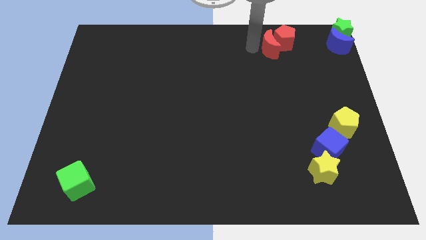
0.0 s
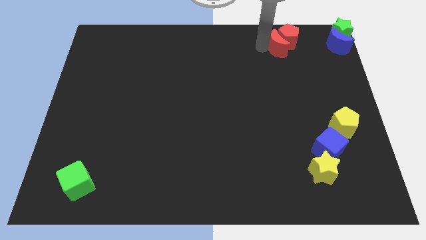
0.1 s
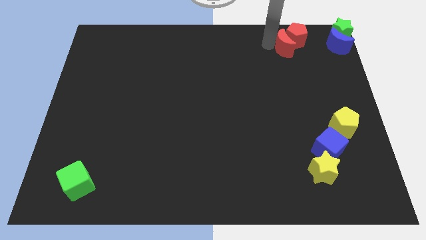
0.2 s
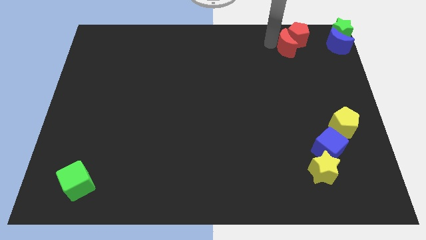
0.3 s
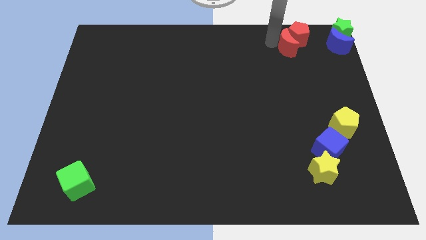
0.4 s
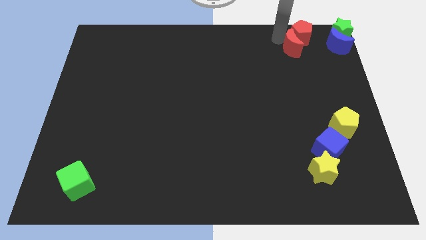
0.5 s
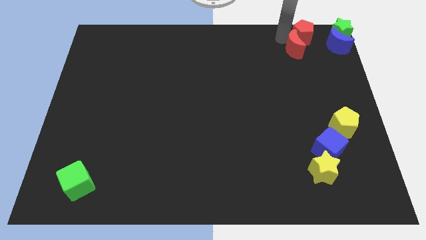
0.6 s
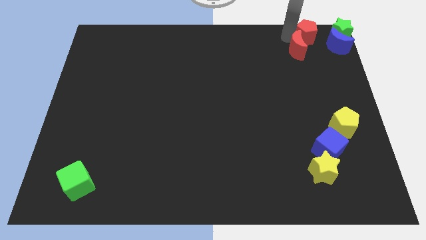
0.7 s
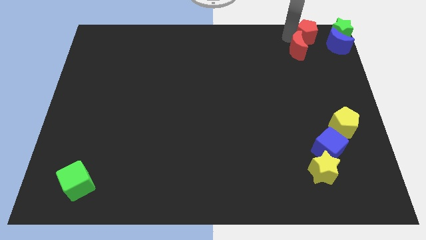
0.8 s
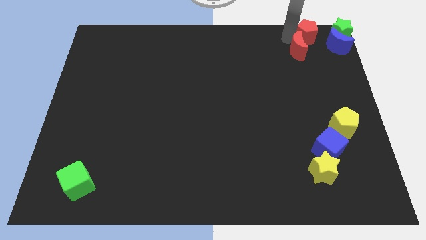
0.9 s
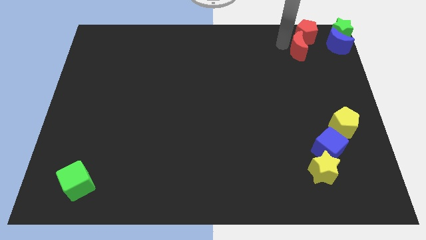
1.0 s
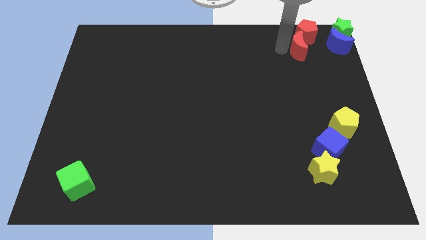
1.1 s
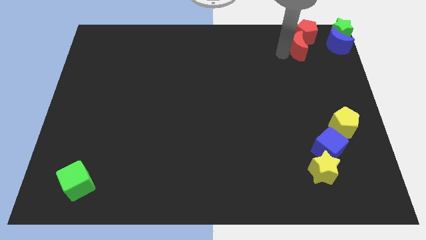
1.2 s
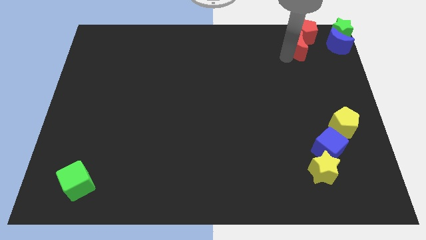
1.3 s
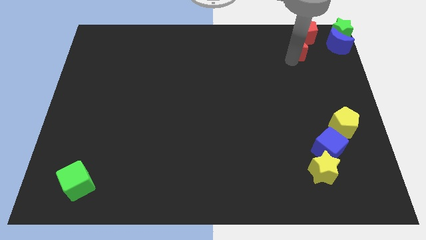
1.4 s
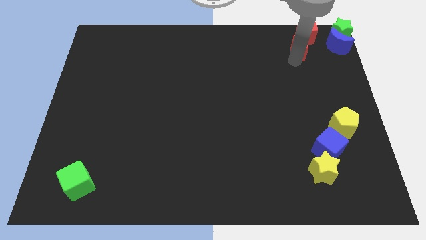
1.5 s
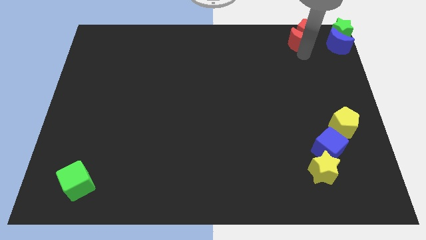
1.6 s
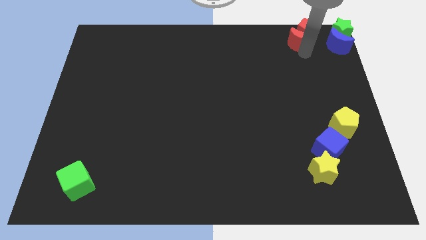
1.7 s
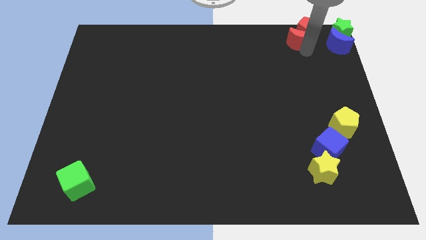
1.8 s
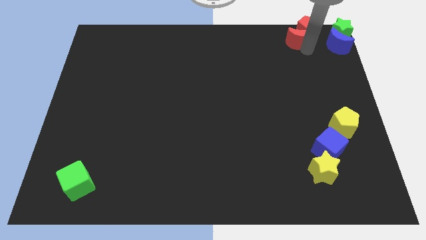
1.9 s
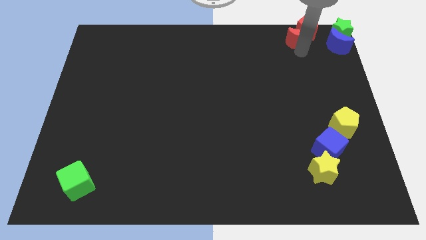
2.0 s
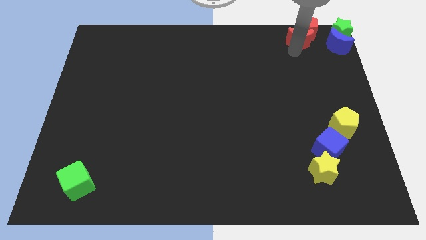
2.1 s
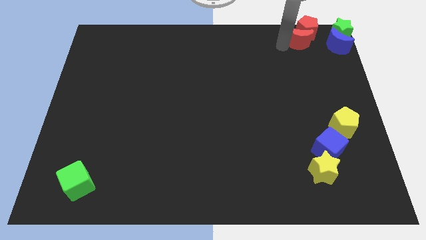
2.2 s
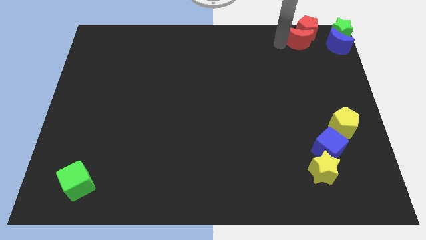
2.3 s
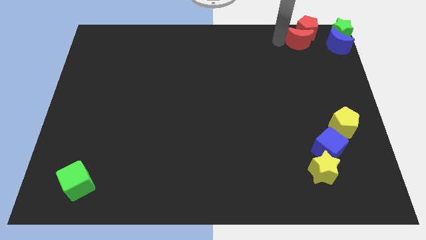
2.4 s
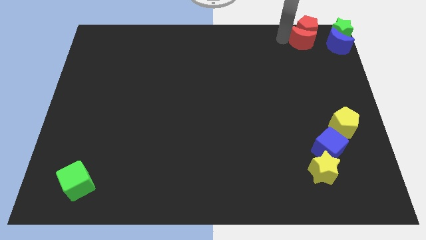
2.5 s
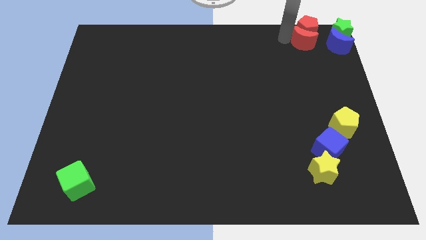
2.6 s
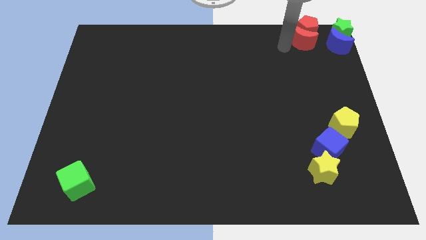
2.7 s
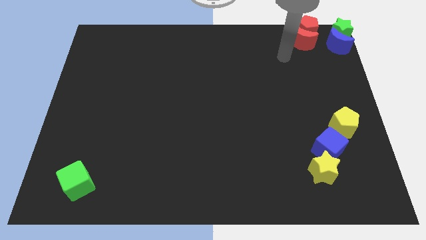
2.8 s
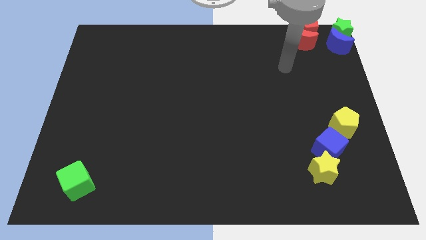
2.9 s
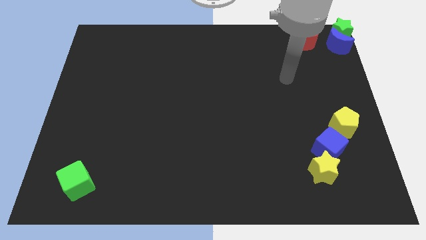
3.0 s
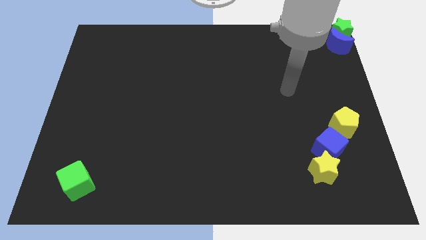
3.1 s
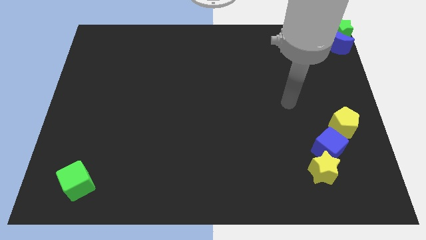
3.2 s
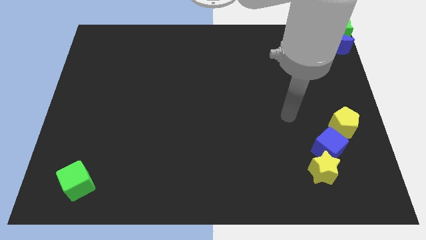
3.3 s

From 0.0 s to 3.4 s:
push red blocks slightly to the right

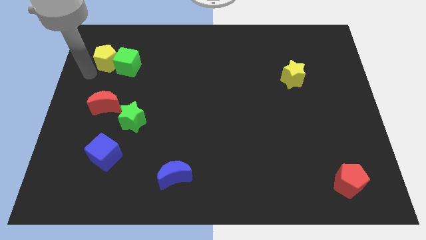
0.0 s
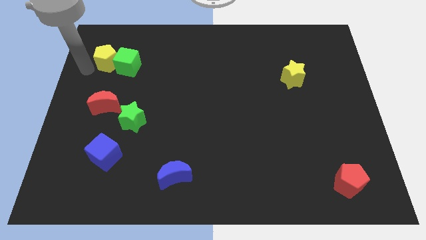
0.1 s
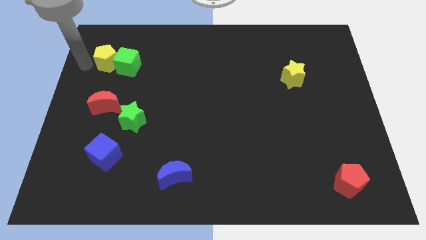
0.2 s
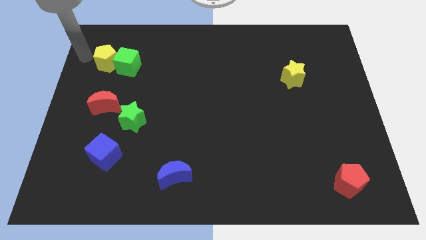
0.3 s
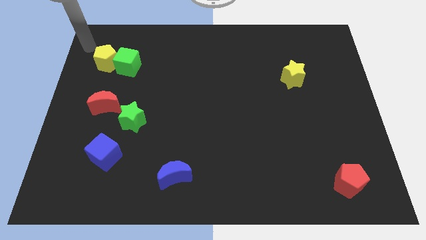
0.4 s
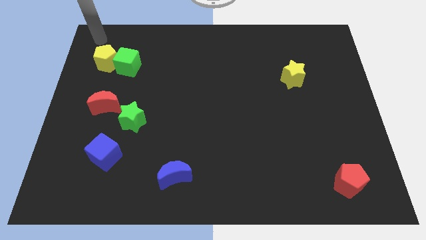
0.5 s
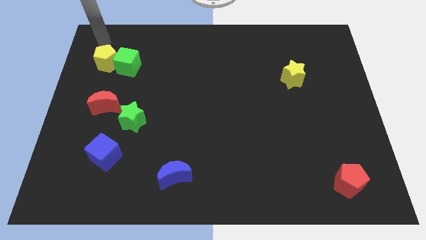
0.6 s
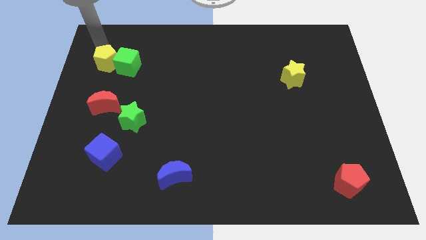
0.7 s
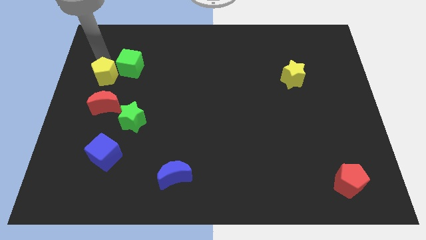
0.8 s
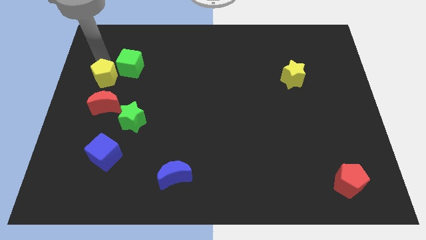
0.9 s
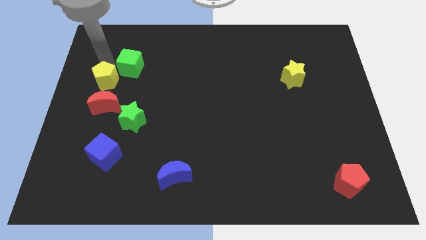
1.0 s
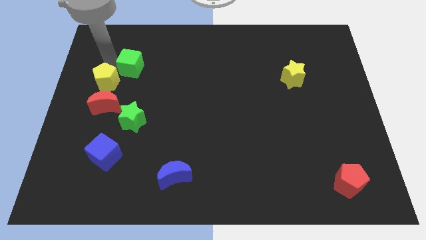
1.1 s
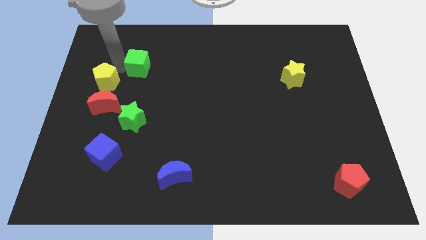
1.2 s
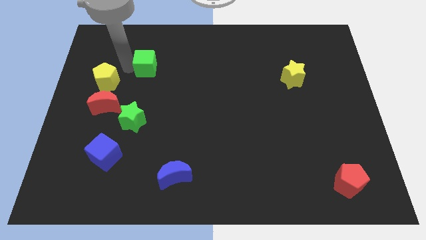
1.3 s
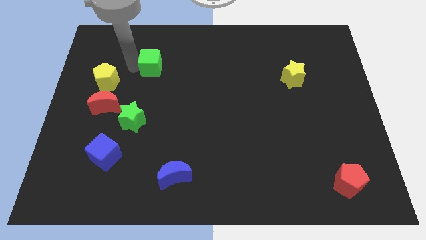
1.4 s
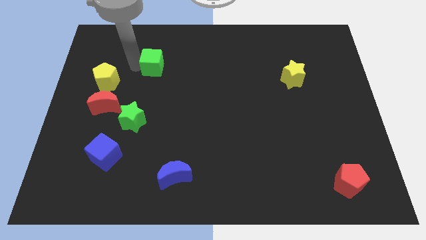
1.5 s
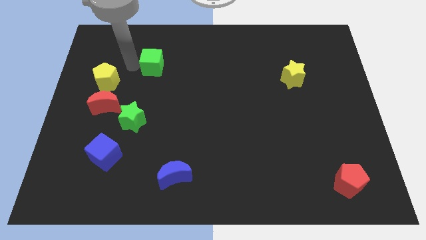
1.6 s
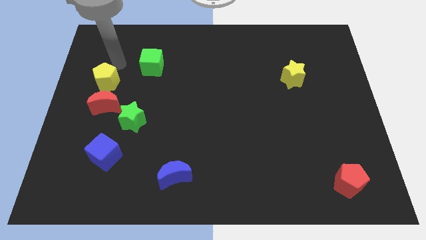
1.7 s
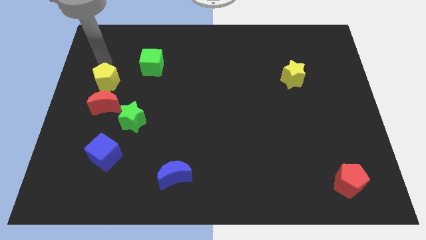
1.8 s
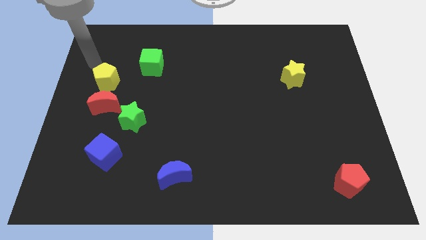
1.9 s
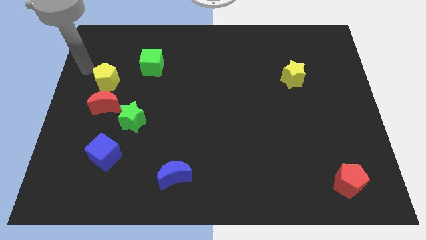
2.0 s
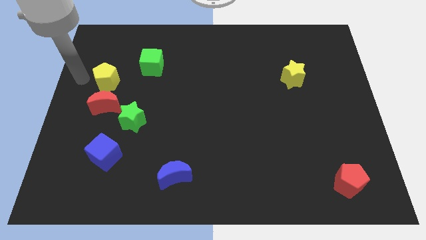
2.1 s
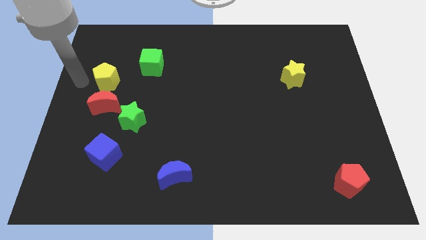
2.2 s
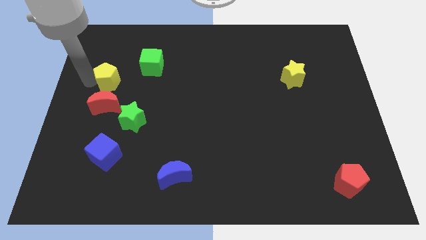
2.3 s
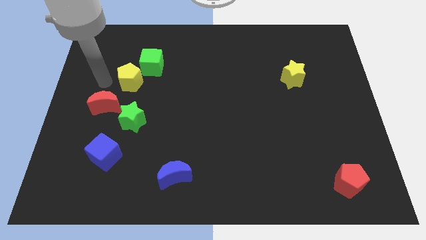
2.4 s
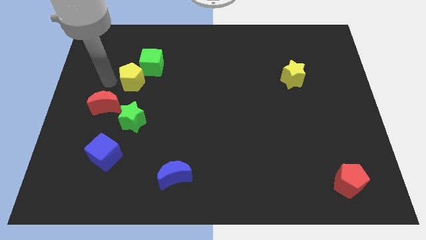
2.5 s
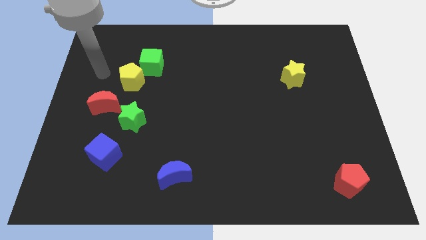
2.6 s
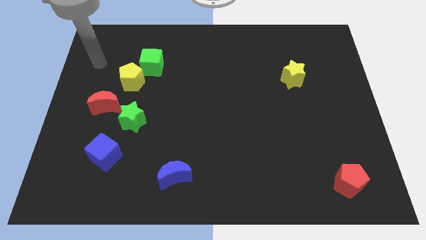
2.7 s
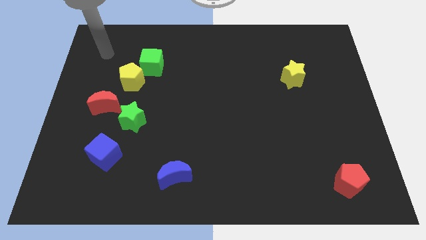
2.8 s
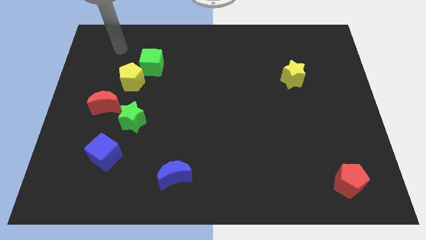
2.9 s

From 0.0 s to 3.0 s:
place the yellow pentagon above the green star

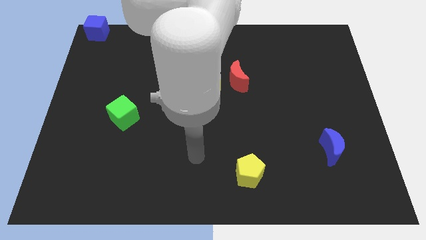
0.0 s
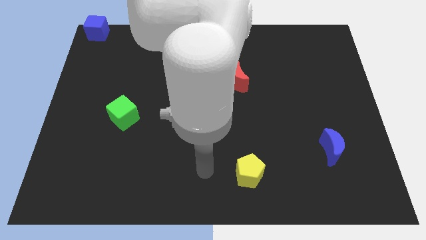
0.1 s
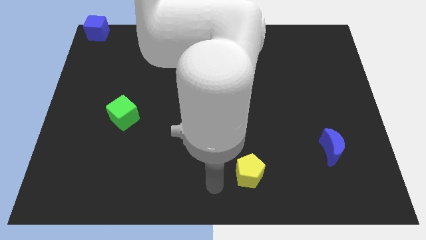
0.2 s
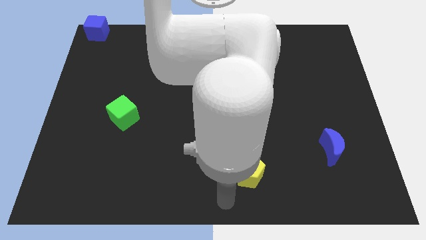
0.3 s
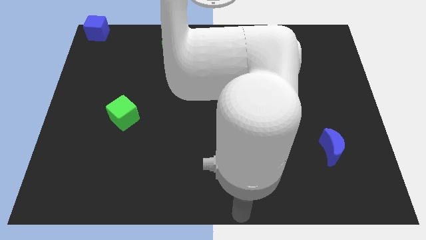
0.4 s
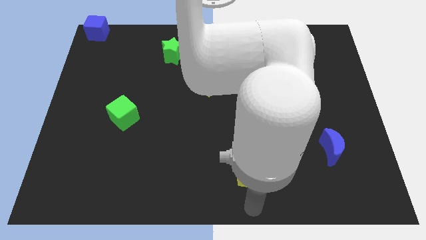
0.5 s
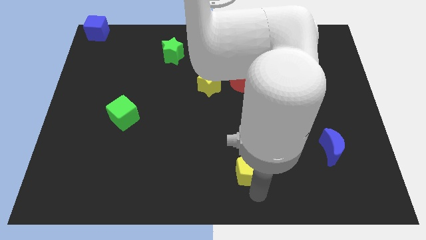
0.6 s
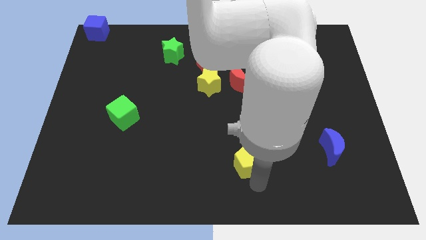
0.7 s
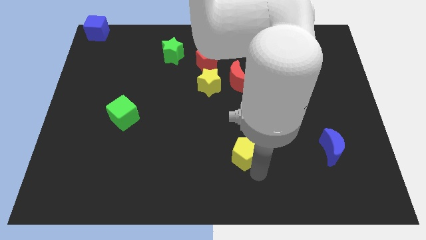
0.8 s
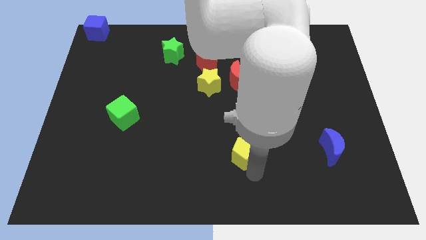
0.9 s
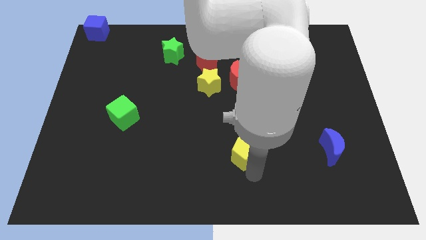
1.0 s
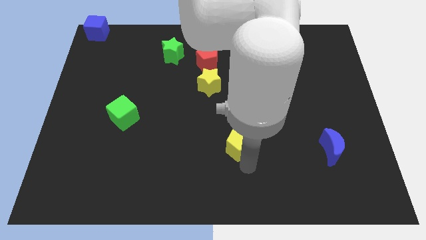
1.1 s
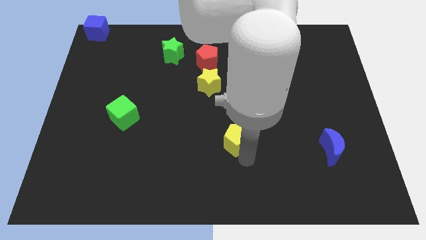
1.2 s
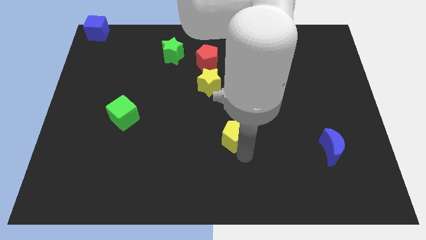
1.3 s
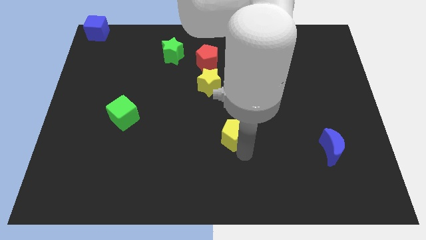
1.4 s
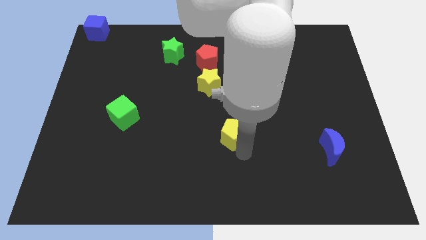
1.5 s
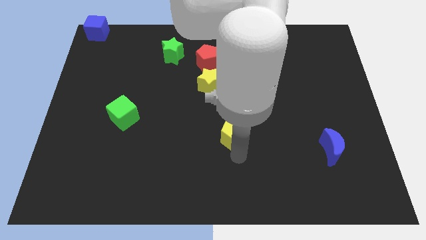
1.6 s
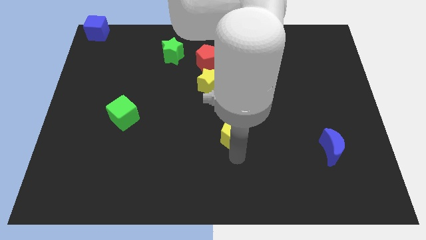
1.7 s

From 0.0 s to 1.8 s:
move the yellow pentagon slightly upwards

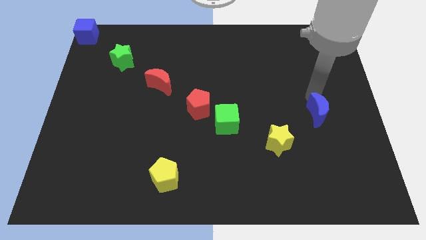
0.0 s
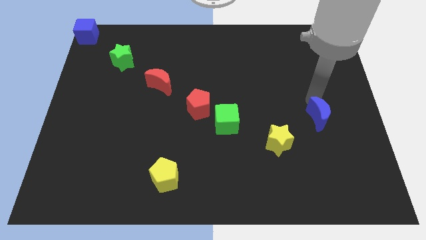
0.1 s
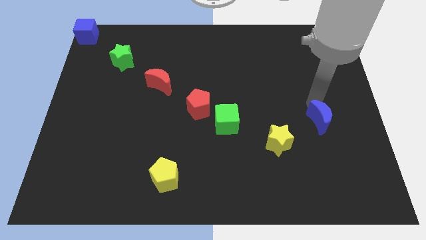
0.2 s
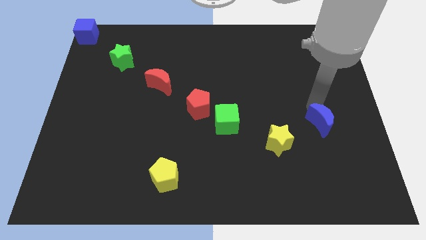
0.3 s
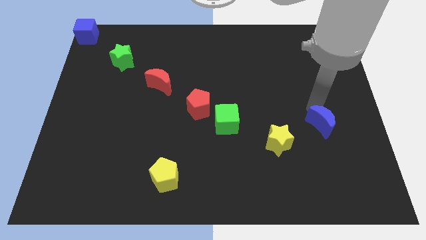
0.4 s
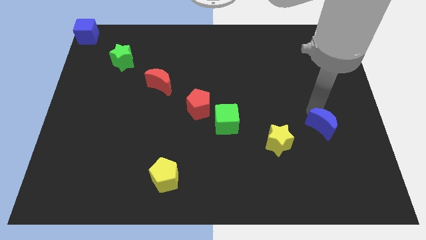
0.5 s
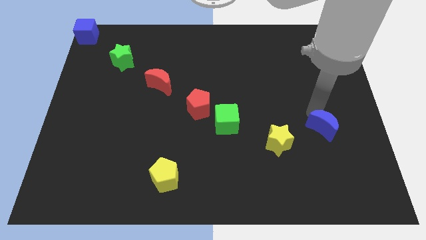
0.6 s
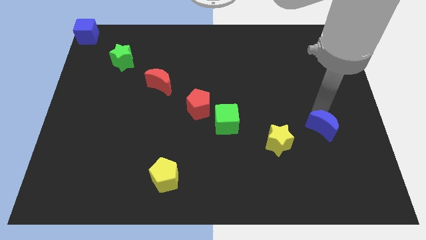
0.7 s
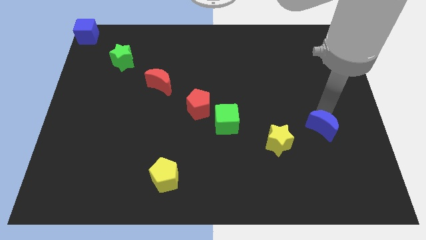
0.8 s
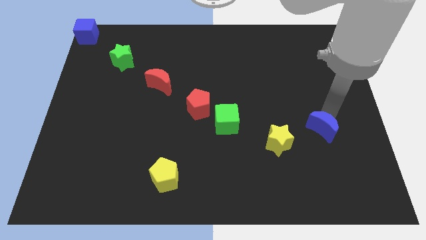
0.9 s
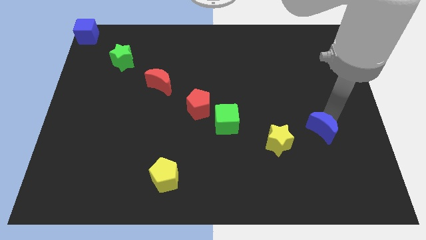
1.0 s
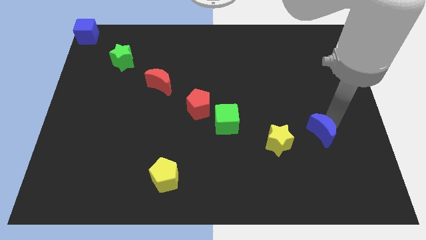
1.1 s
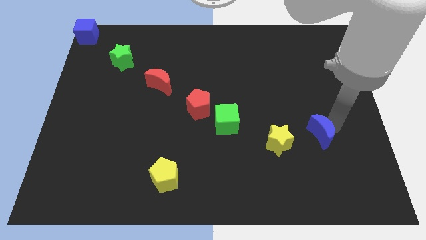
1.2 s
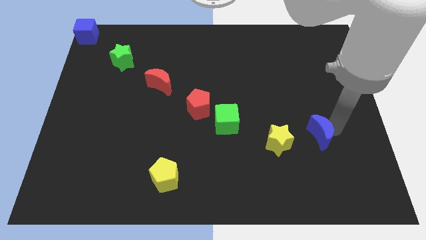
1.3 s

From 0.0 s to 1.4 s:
push the blue moon to the parallel right of the yellow star
